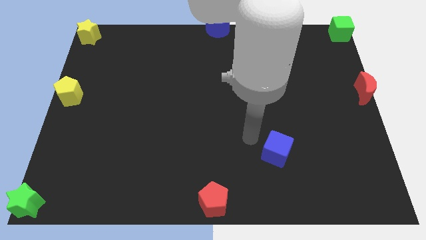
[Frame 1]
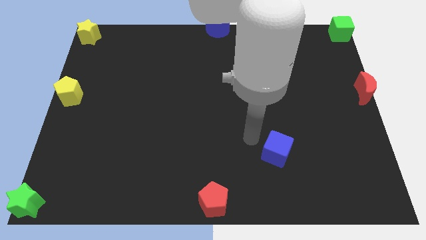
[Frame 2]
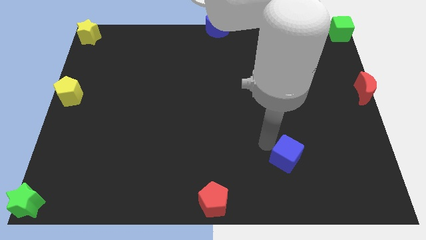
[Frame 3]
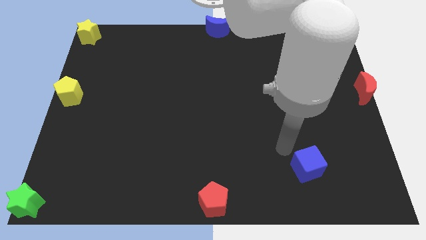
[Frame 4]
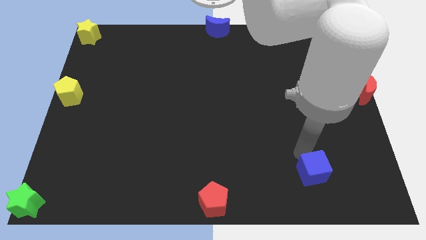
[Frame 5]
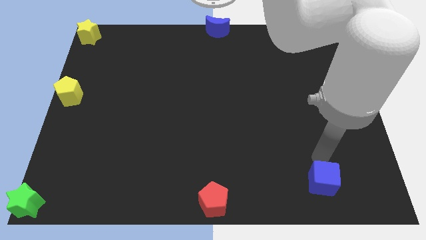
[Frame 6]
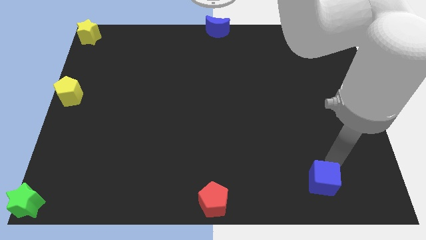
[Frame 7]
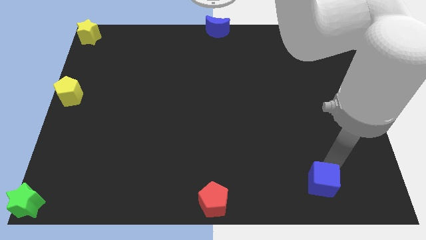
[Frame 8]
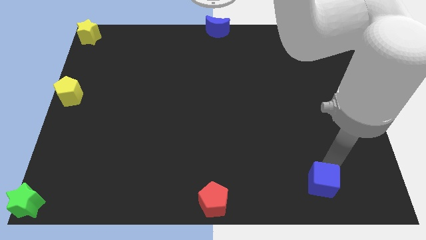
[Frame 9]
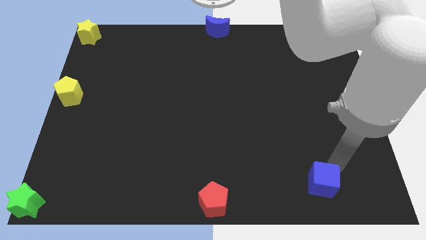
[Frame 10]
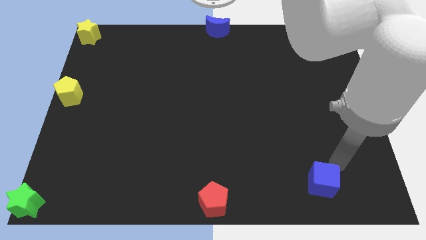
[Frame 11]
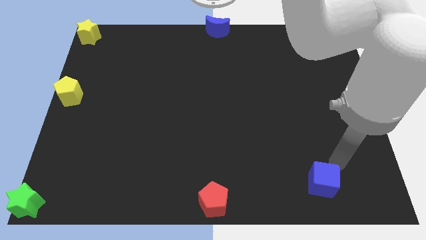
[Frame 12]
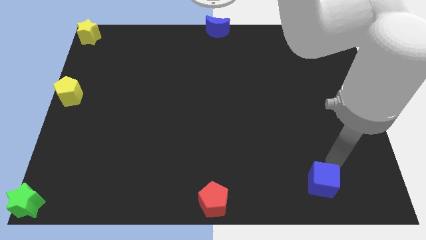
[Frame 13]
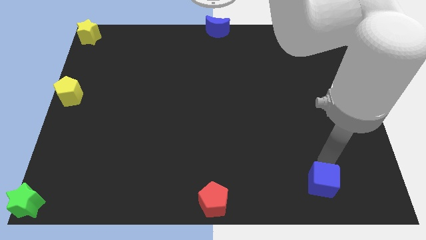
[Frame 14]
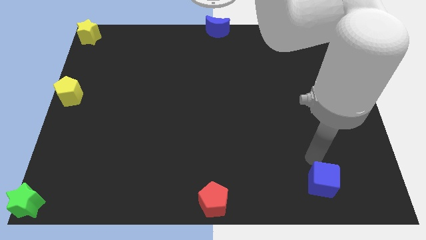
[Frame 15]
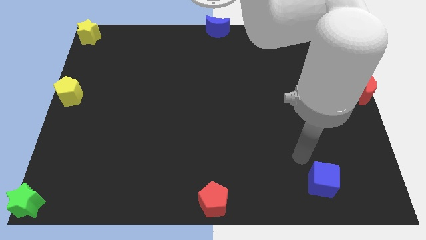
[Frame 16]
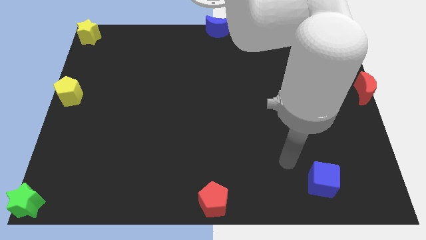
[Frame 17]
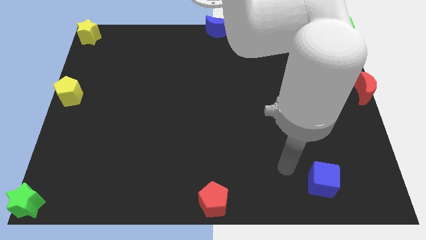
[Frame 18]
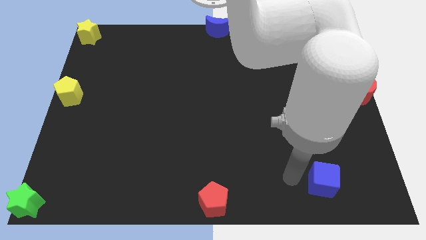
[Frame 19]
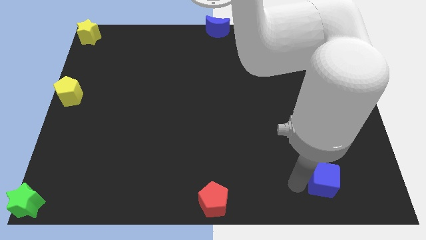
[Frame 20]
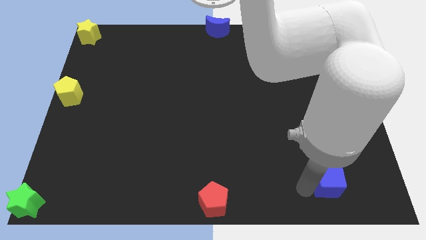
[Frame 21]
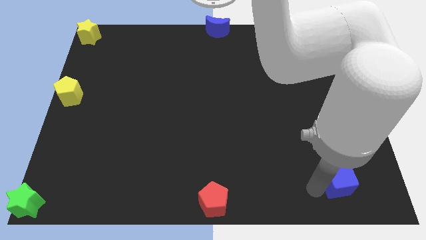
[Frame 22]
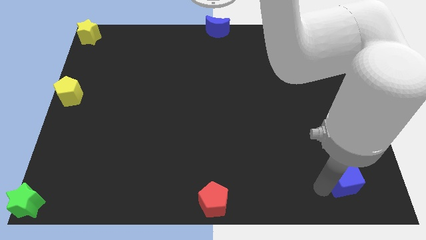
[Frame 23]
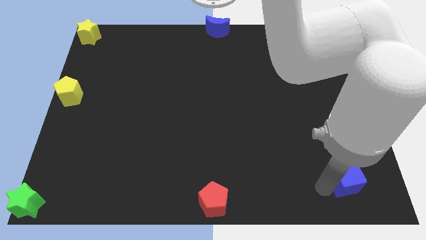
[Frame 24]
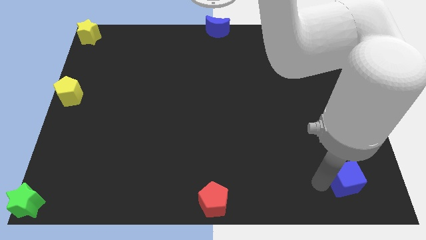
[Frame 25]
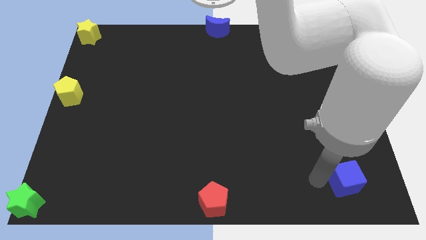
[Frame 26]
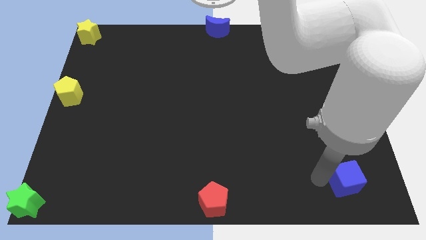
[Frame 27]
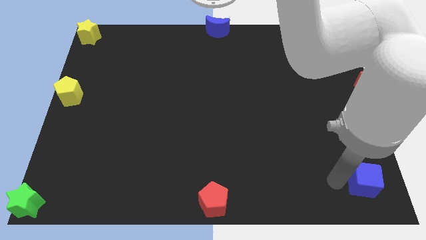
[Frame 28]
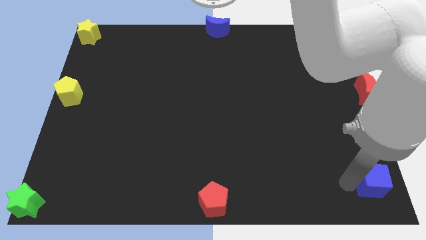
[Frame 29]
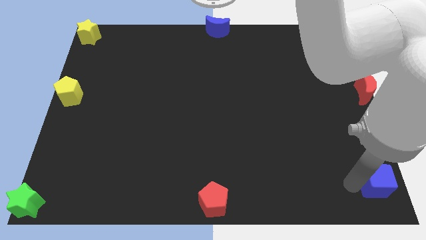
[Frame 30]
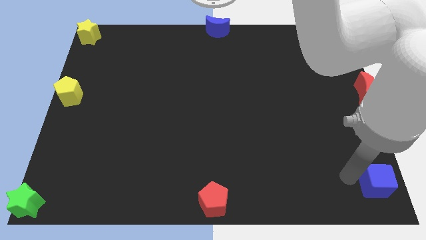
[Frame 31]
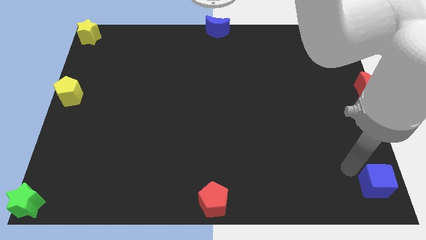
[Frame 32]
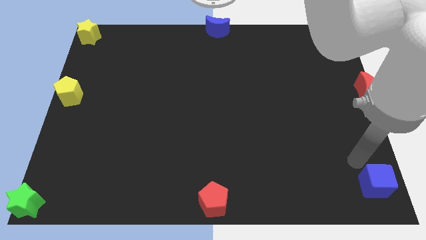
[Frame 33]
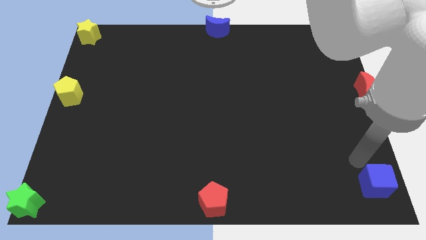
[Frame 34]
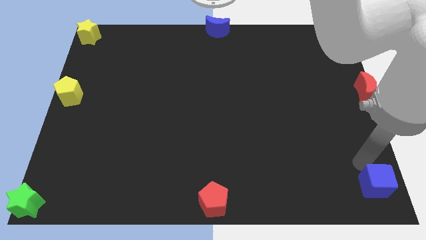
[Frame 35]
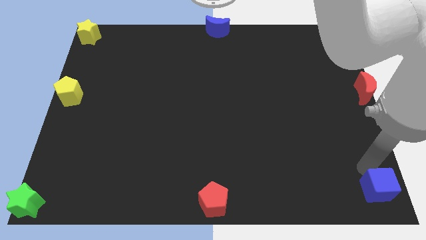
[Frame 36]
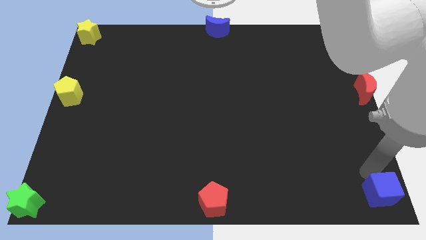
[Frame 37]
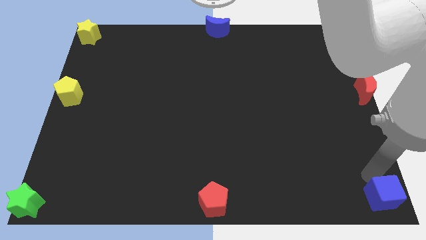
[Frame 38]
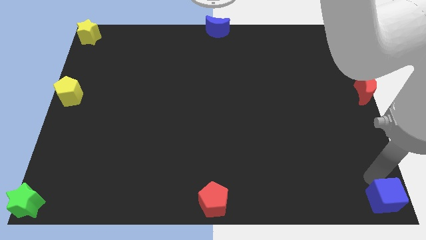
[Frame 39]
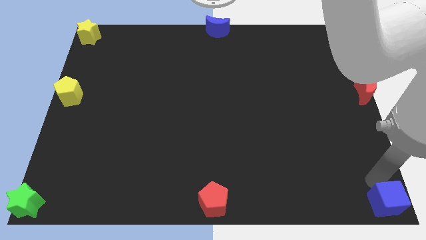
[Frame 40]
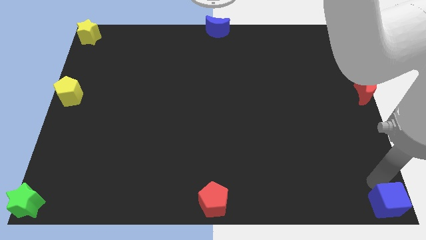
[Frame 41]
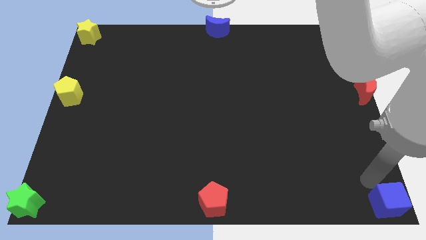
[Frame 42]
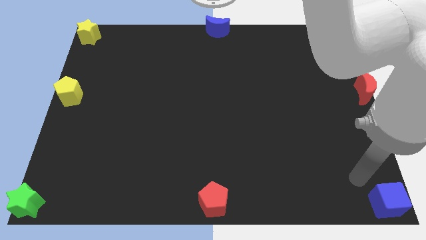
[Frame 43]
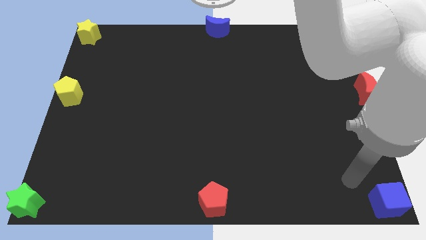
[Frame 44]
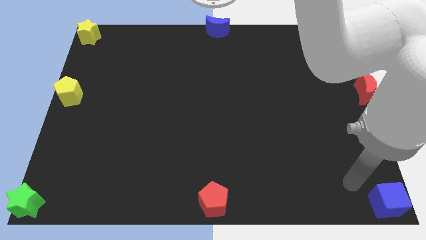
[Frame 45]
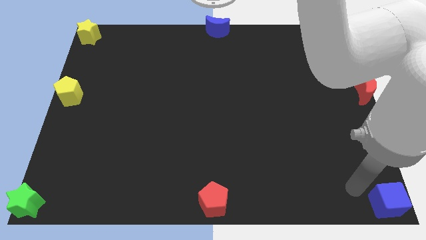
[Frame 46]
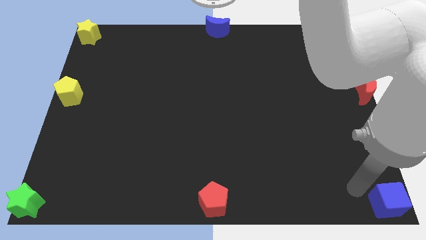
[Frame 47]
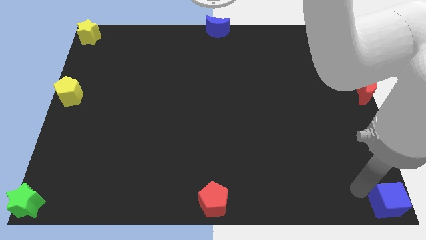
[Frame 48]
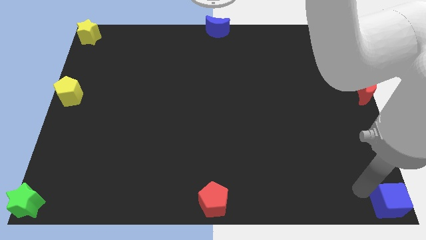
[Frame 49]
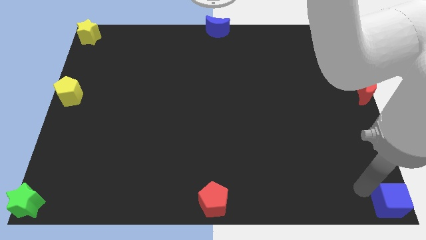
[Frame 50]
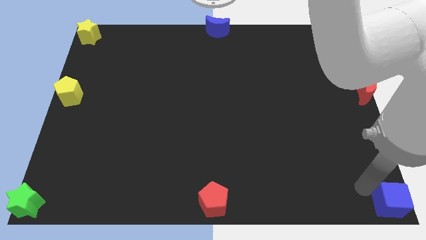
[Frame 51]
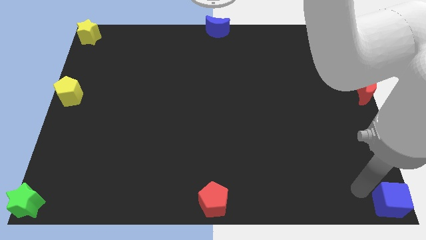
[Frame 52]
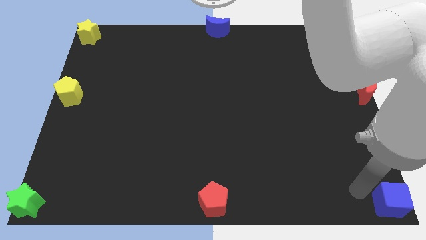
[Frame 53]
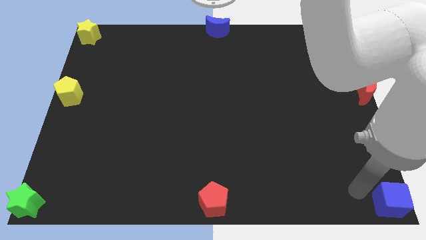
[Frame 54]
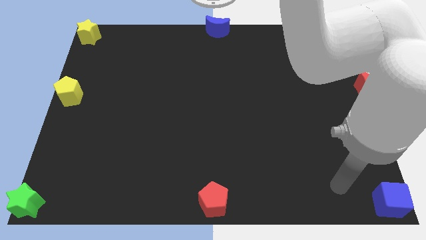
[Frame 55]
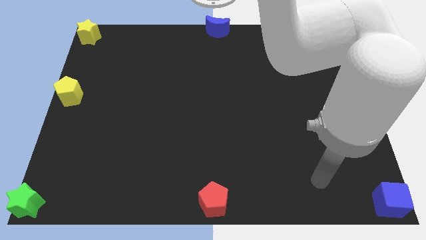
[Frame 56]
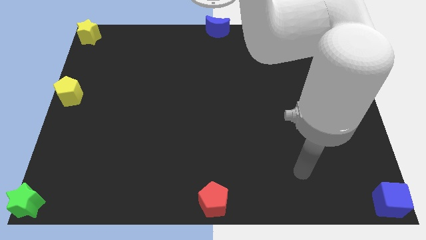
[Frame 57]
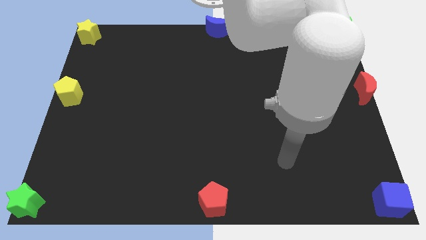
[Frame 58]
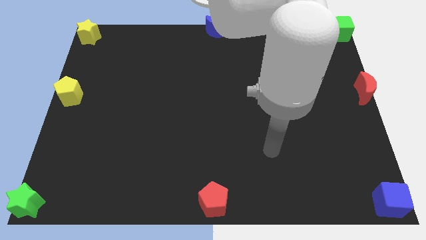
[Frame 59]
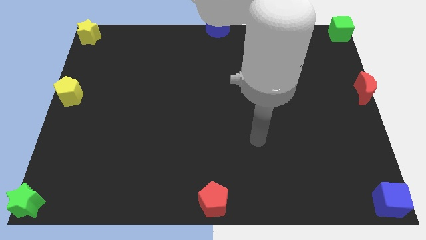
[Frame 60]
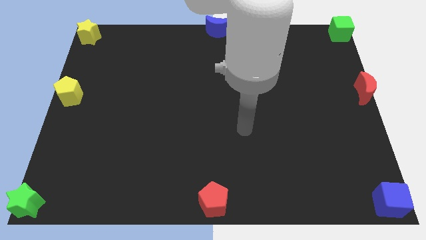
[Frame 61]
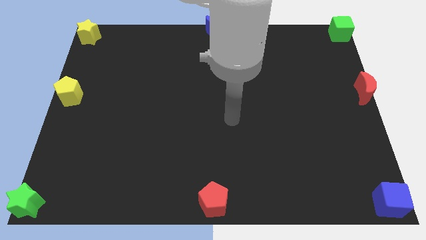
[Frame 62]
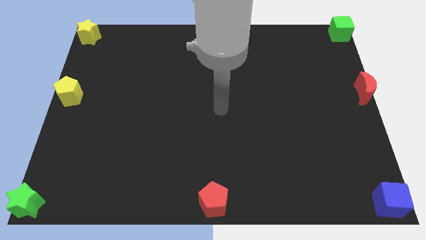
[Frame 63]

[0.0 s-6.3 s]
place the blue cube below the red crescent

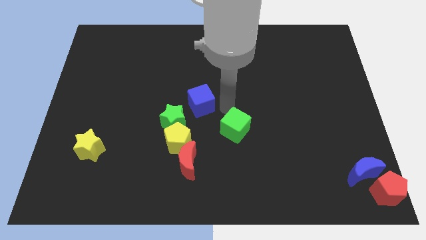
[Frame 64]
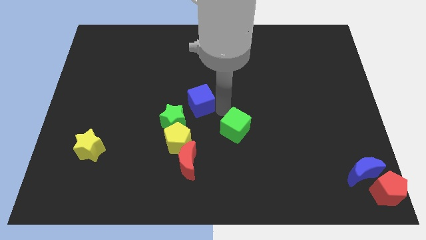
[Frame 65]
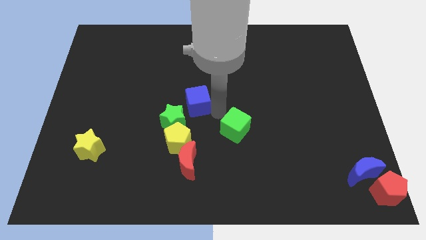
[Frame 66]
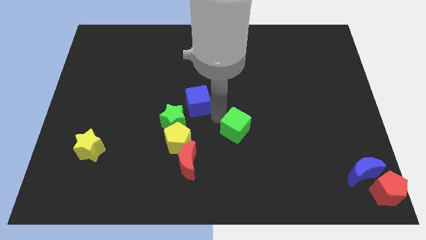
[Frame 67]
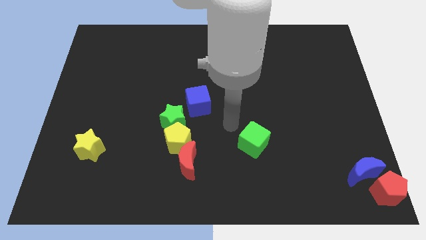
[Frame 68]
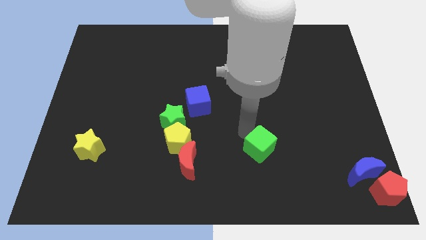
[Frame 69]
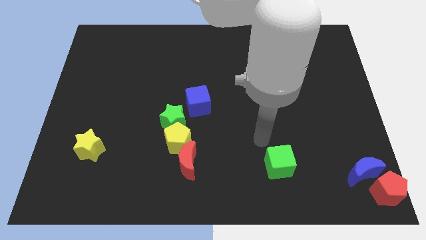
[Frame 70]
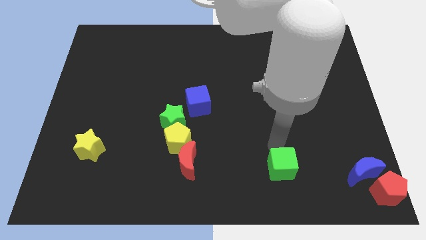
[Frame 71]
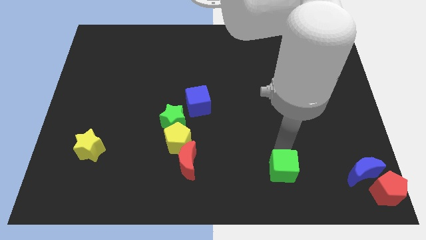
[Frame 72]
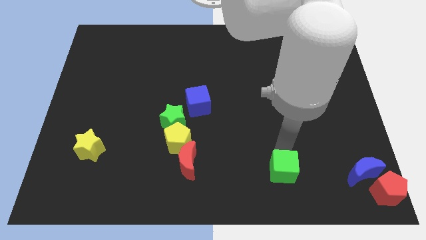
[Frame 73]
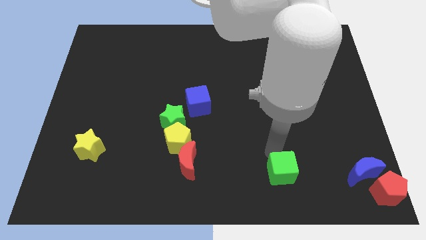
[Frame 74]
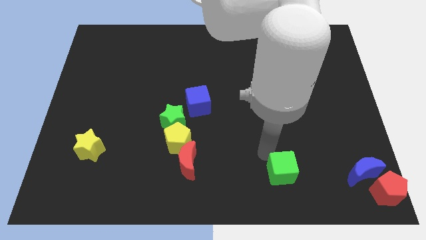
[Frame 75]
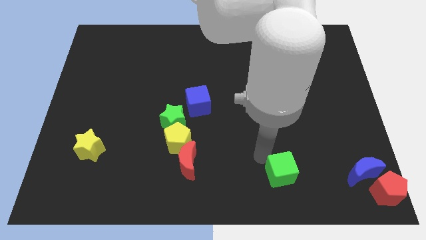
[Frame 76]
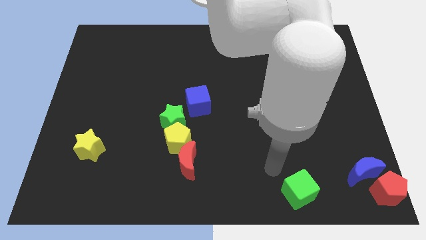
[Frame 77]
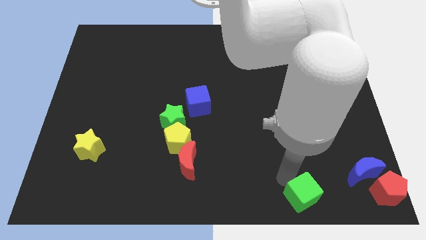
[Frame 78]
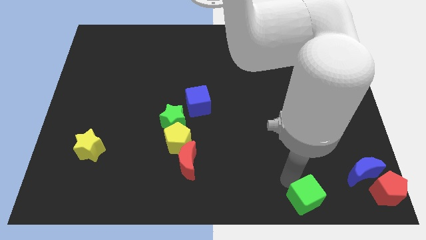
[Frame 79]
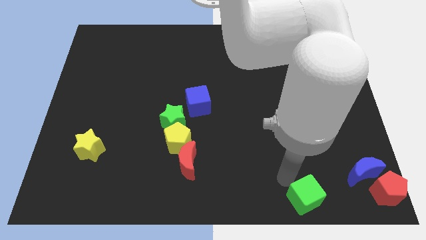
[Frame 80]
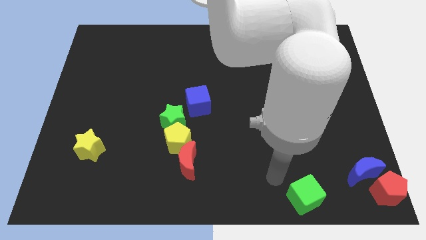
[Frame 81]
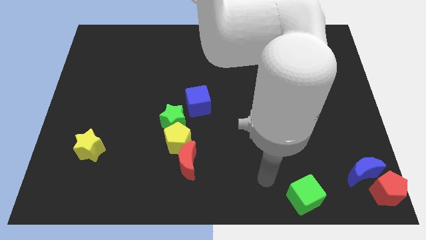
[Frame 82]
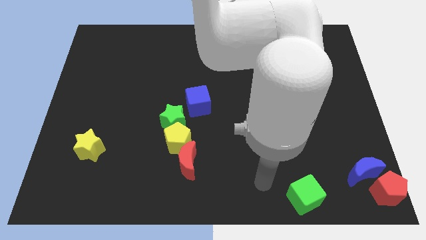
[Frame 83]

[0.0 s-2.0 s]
put the green cube to the left of the red pentagon

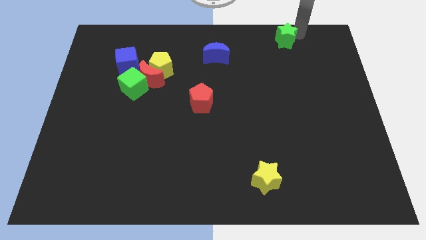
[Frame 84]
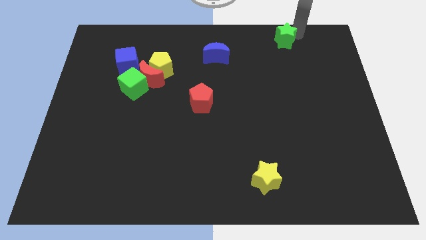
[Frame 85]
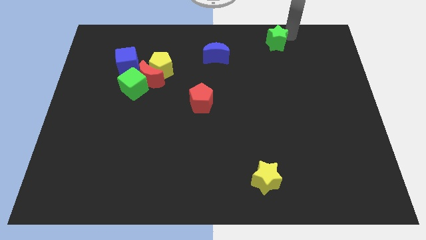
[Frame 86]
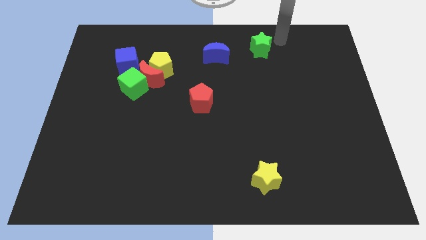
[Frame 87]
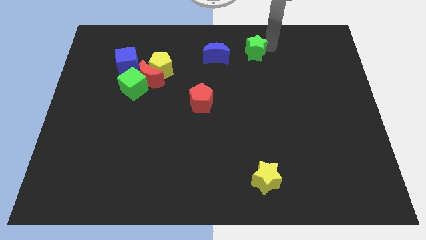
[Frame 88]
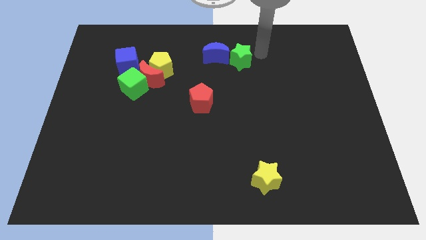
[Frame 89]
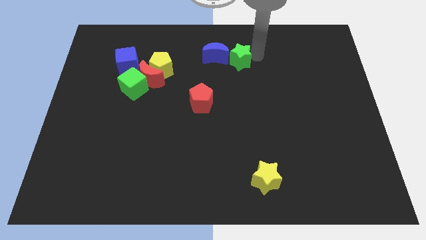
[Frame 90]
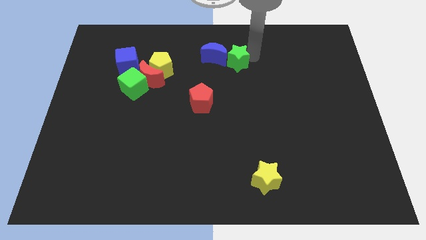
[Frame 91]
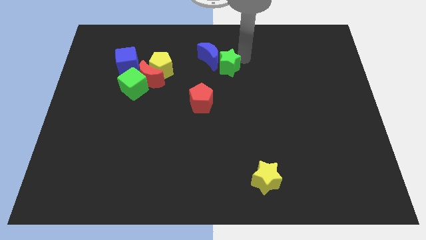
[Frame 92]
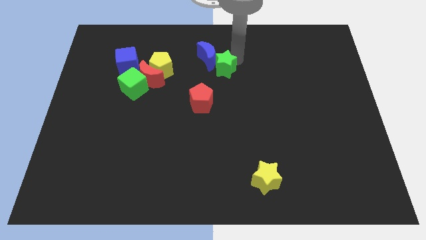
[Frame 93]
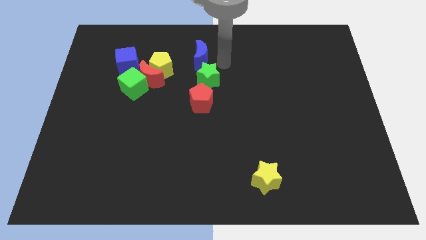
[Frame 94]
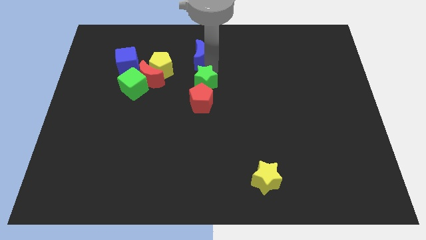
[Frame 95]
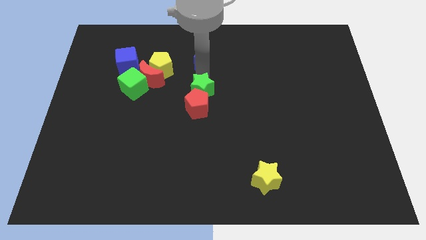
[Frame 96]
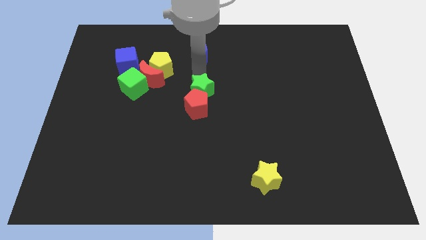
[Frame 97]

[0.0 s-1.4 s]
push the green star into the blue moon
